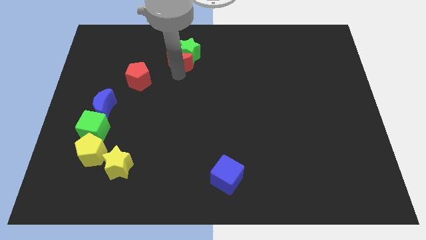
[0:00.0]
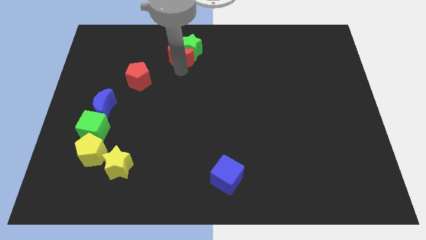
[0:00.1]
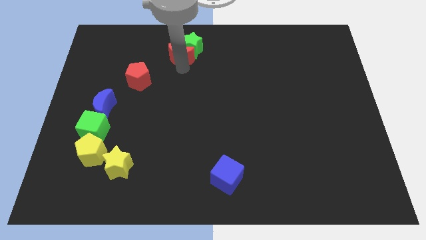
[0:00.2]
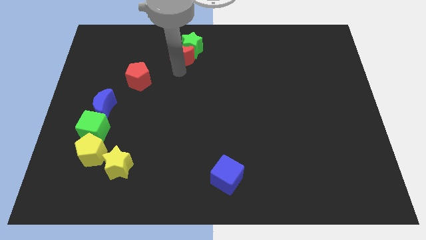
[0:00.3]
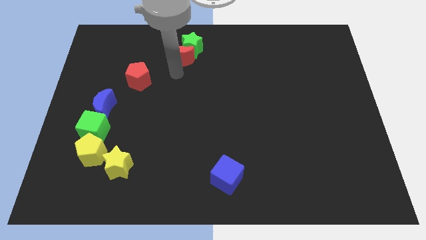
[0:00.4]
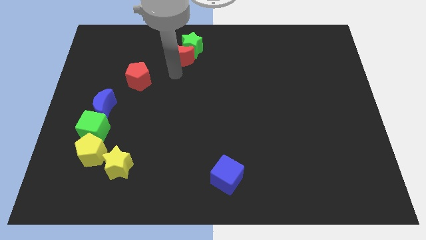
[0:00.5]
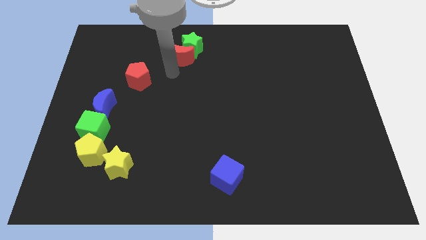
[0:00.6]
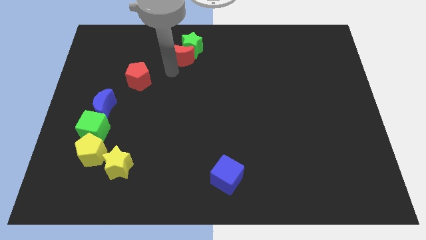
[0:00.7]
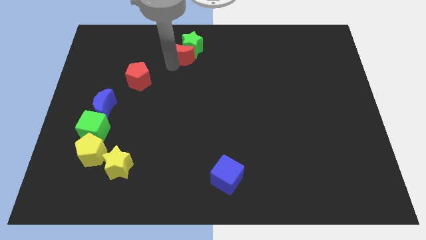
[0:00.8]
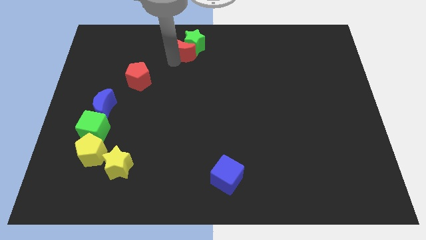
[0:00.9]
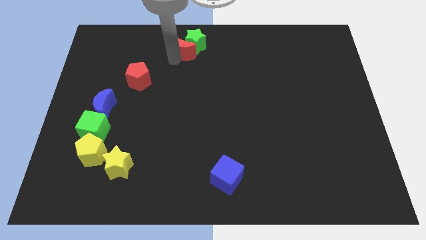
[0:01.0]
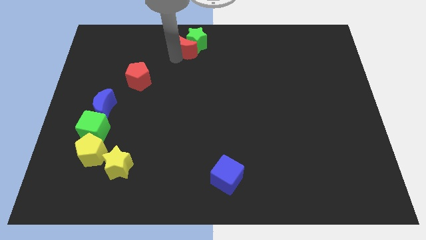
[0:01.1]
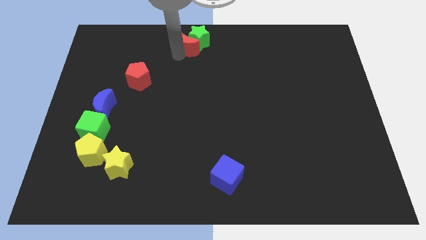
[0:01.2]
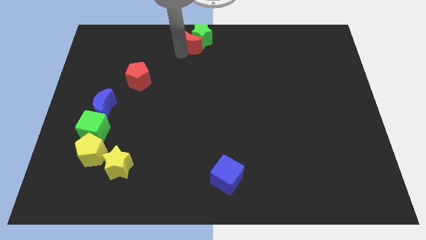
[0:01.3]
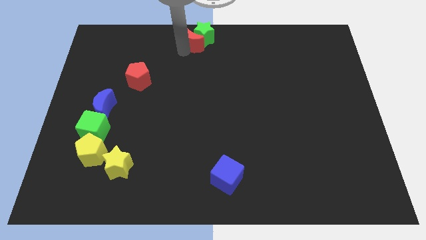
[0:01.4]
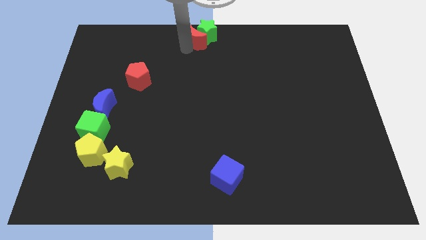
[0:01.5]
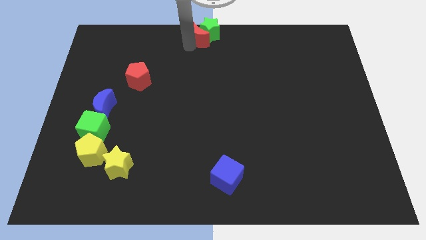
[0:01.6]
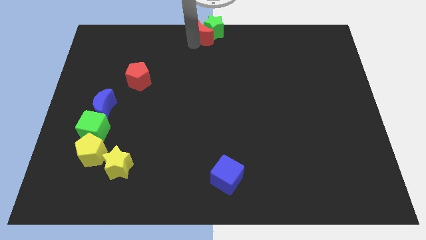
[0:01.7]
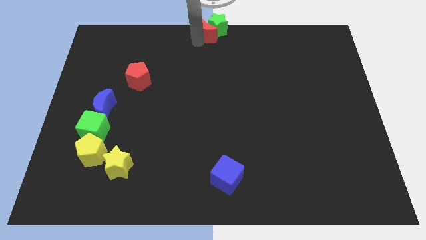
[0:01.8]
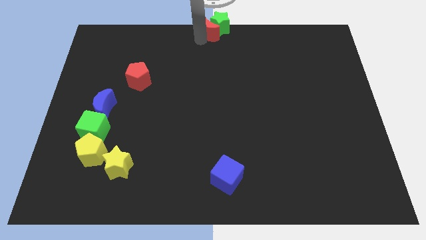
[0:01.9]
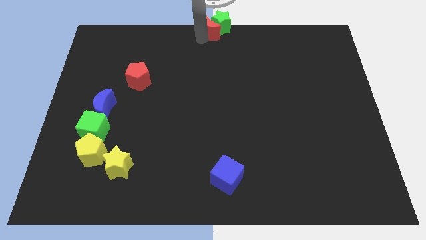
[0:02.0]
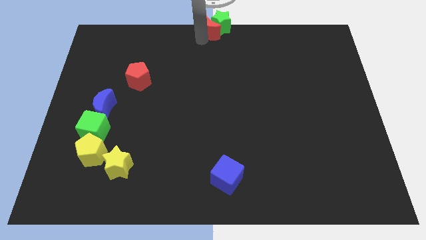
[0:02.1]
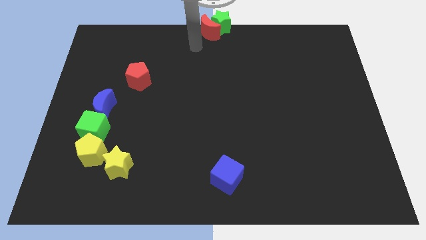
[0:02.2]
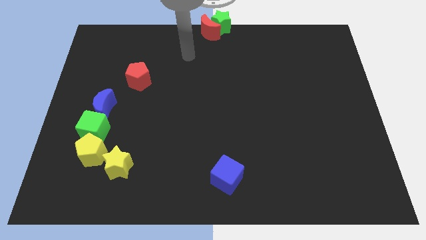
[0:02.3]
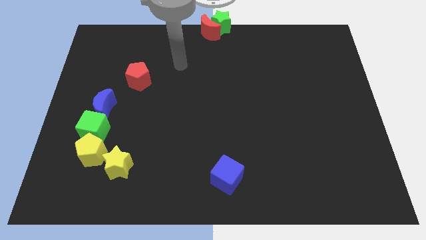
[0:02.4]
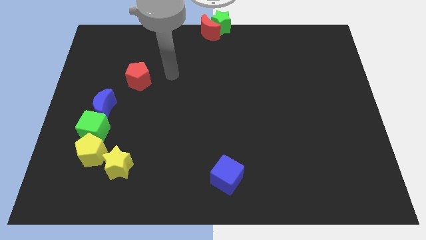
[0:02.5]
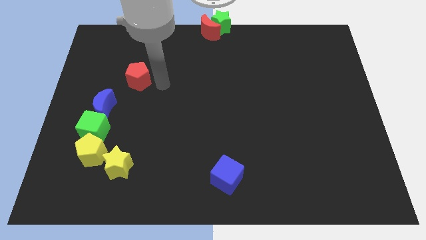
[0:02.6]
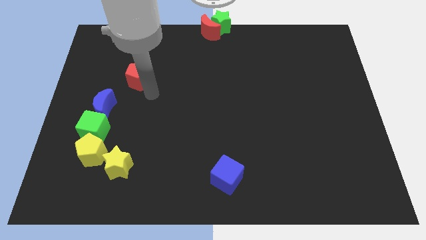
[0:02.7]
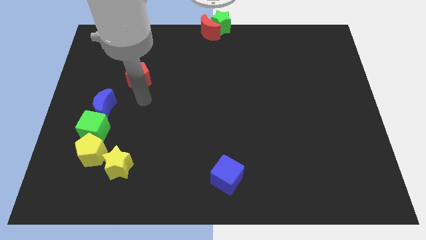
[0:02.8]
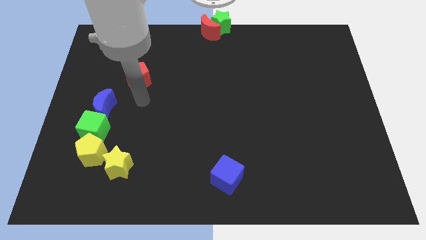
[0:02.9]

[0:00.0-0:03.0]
place the red moon with green star to the top center

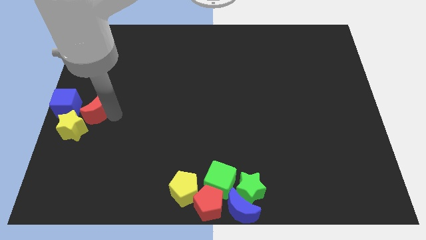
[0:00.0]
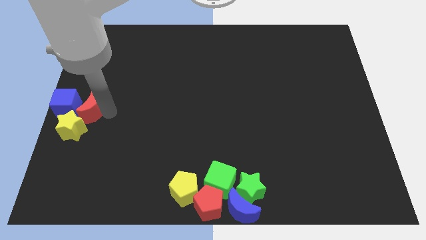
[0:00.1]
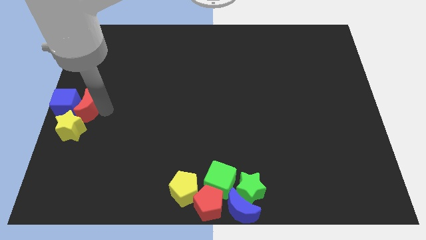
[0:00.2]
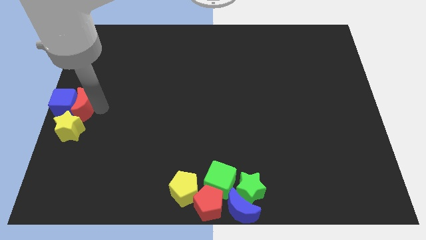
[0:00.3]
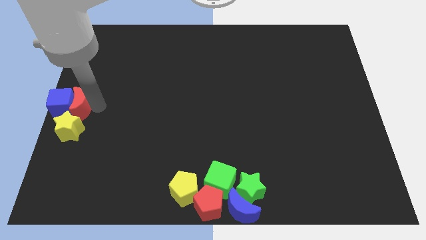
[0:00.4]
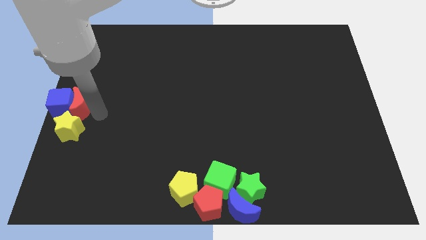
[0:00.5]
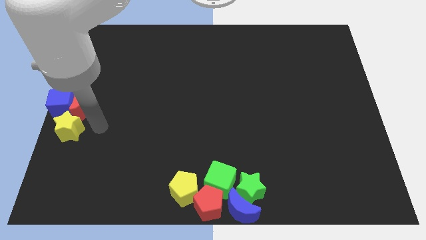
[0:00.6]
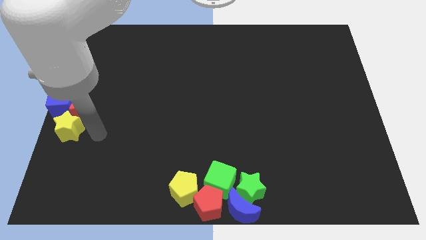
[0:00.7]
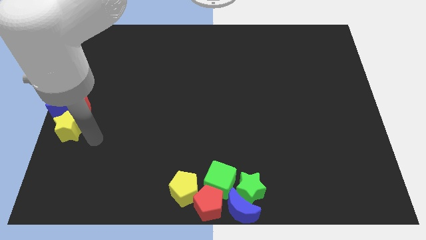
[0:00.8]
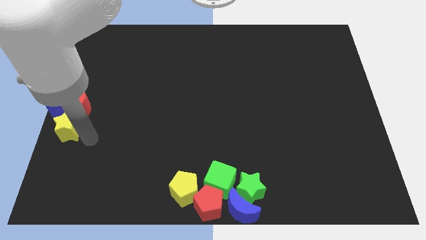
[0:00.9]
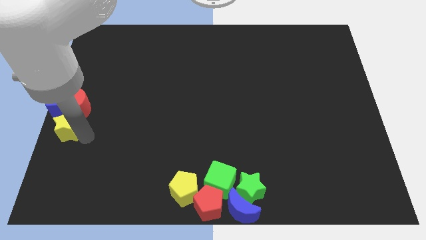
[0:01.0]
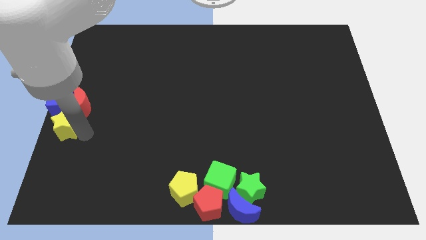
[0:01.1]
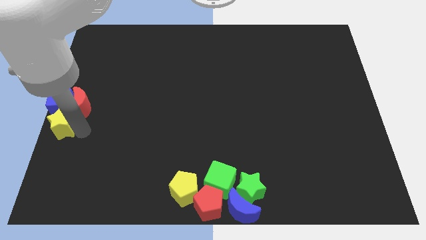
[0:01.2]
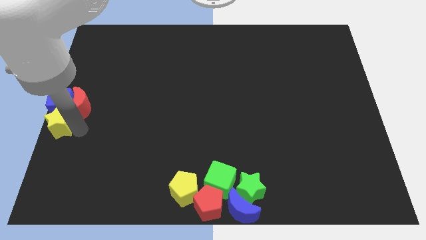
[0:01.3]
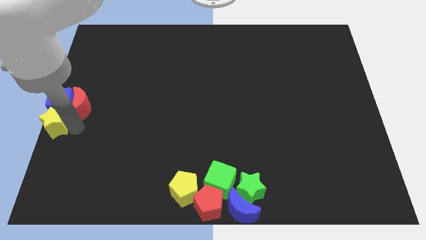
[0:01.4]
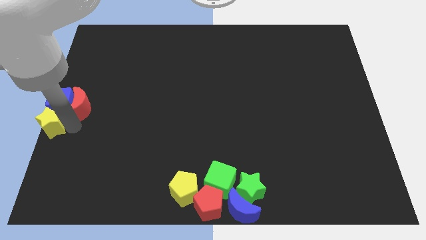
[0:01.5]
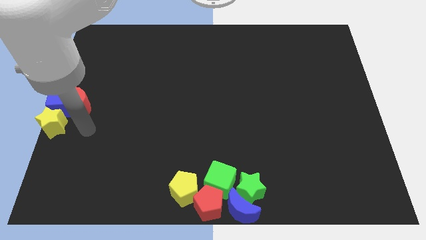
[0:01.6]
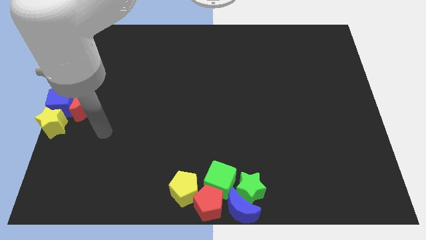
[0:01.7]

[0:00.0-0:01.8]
push the red moon into the blue cube

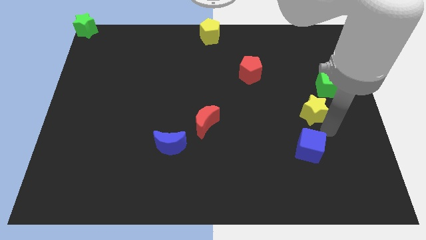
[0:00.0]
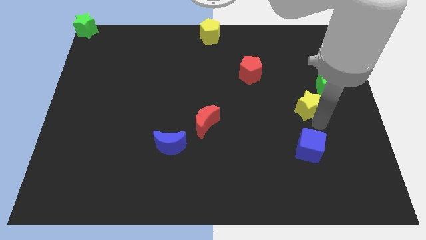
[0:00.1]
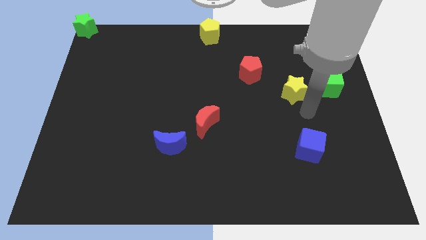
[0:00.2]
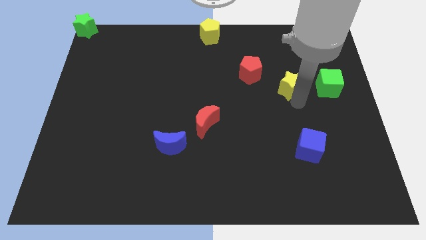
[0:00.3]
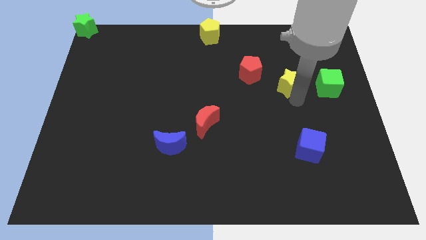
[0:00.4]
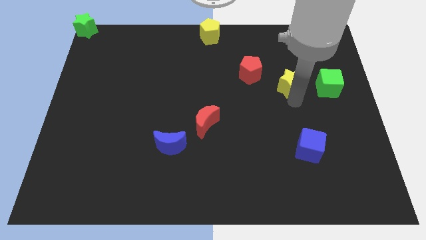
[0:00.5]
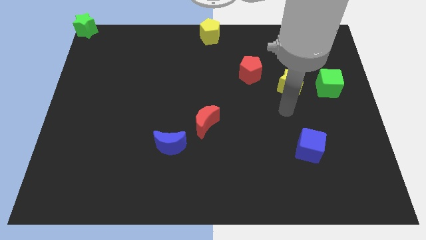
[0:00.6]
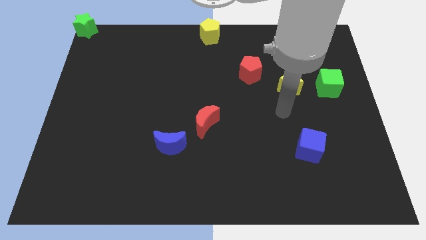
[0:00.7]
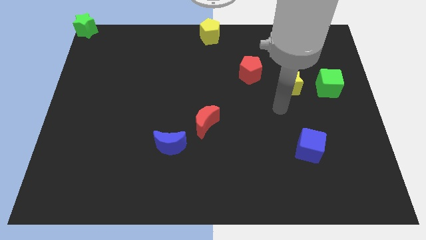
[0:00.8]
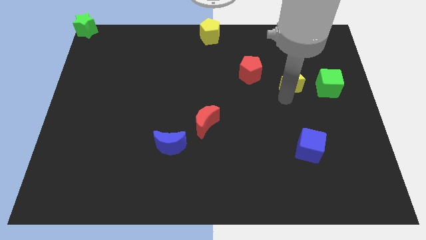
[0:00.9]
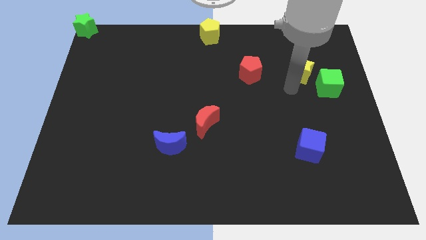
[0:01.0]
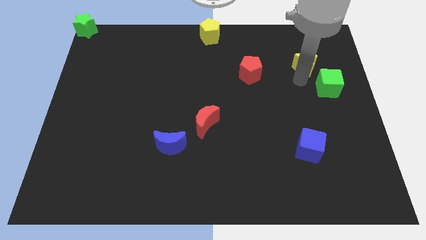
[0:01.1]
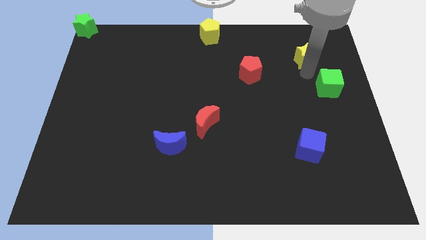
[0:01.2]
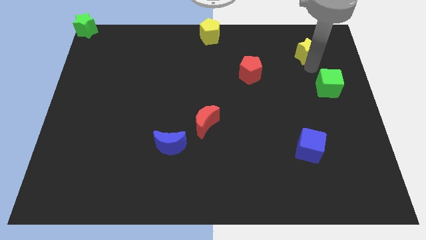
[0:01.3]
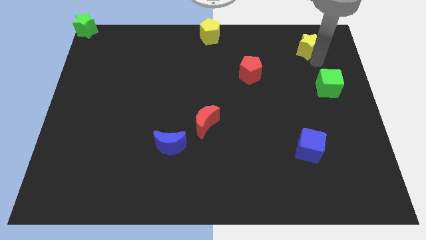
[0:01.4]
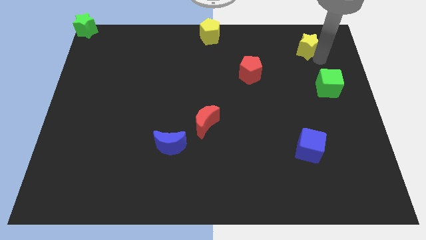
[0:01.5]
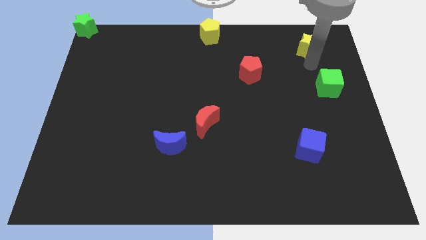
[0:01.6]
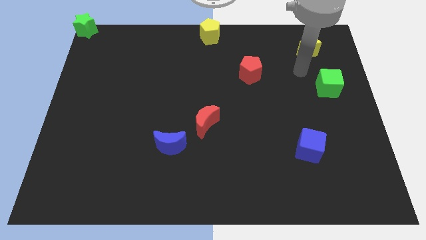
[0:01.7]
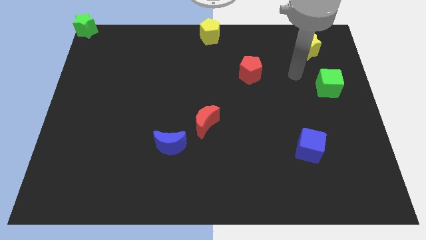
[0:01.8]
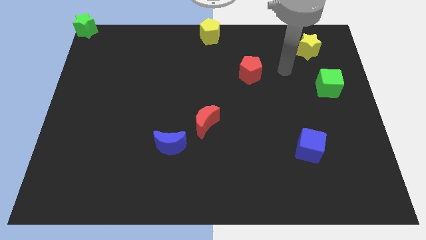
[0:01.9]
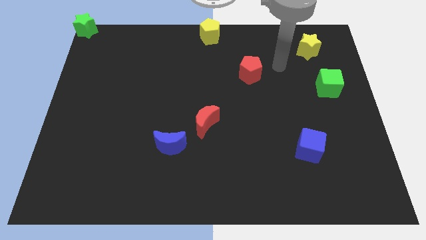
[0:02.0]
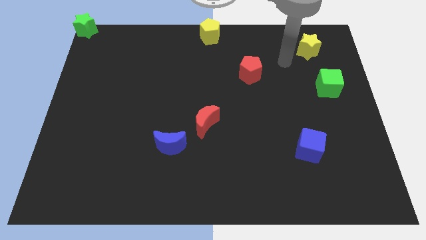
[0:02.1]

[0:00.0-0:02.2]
push yellow star towards top right

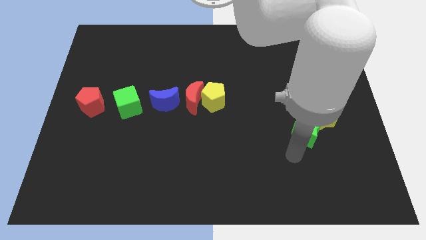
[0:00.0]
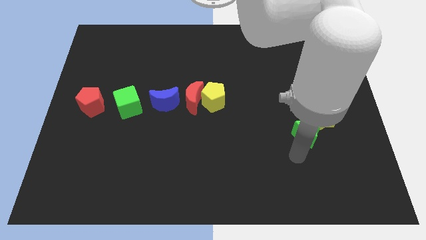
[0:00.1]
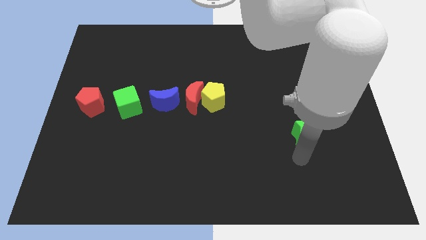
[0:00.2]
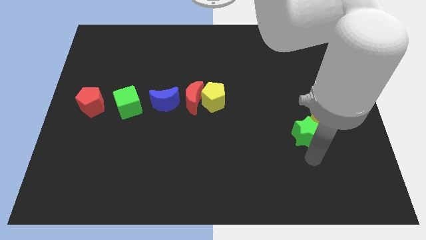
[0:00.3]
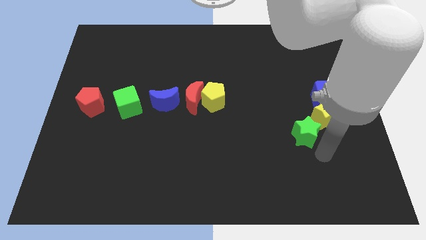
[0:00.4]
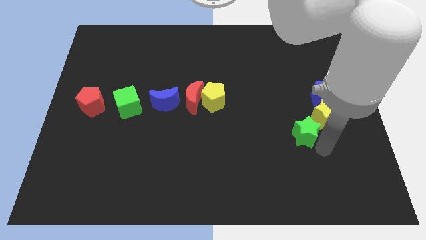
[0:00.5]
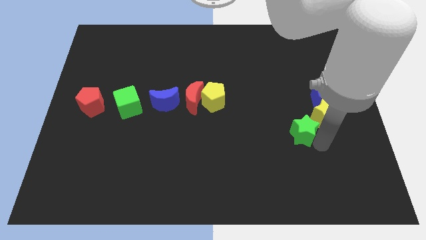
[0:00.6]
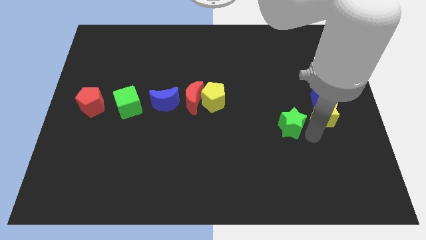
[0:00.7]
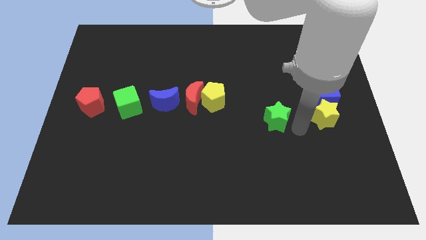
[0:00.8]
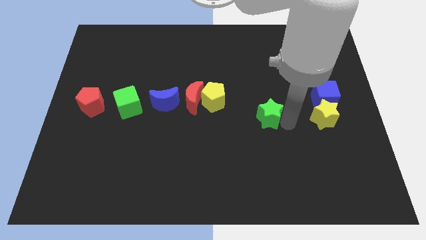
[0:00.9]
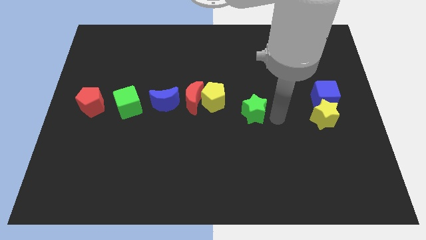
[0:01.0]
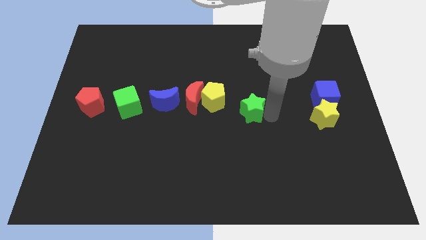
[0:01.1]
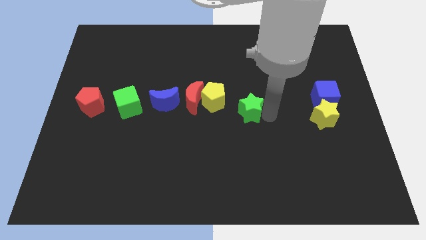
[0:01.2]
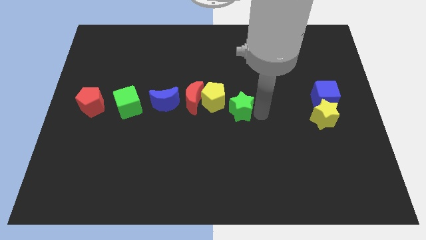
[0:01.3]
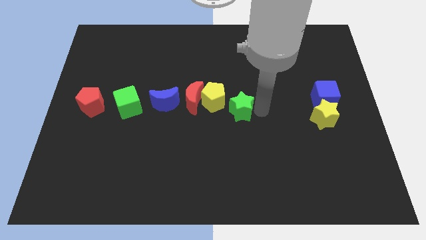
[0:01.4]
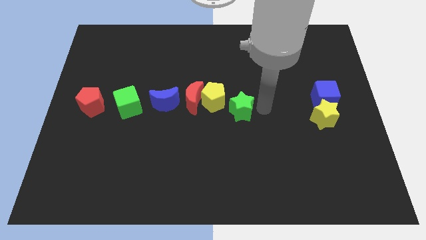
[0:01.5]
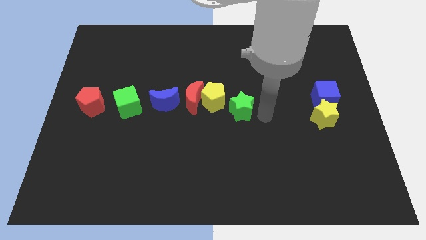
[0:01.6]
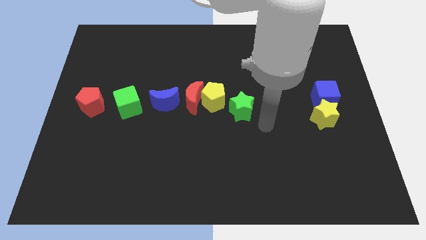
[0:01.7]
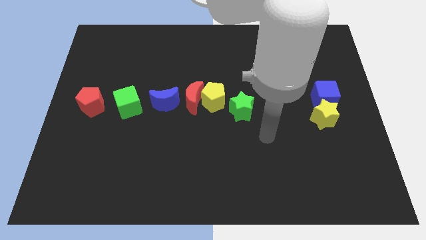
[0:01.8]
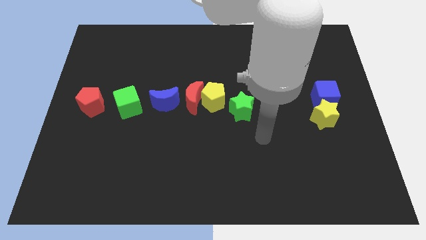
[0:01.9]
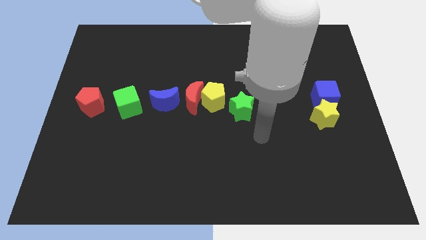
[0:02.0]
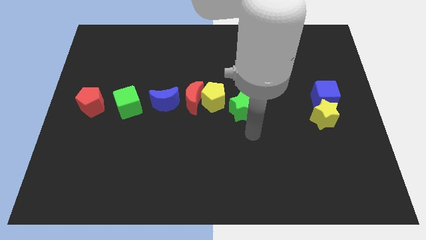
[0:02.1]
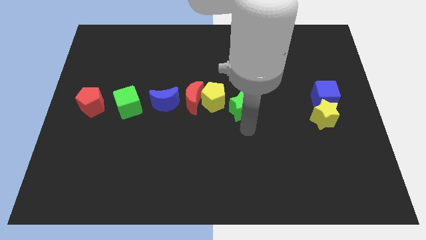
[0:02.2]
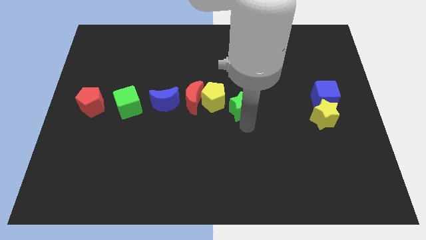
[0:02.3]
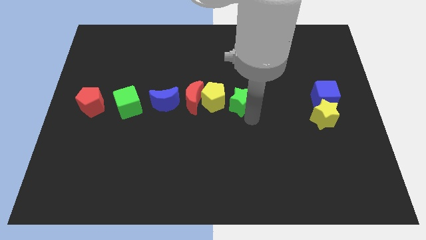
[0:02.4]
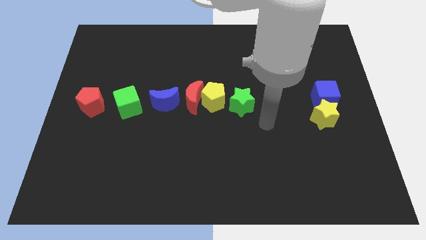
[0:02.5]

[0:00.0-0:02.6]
move the green star to the right of the yellow pentagon
